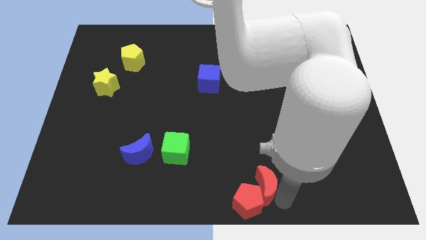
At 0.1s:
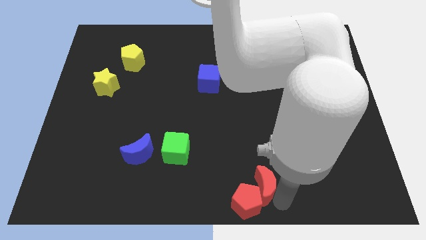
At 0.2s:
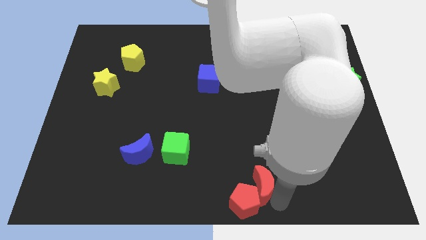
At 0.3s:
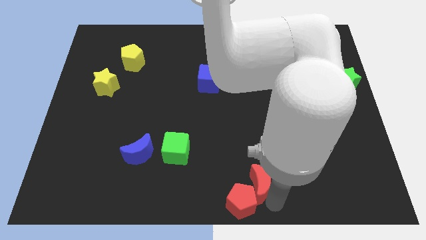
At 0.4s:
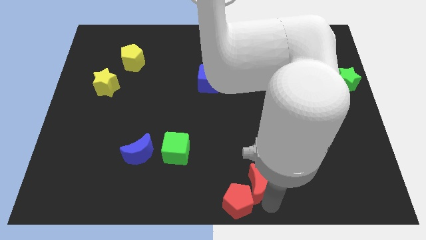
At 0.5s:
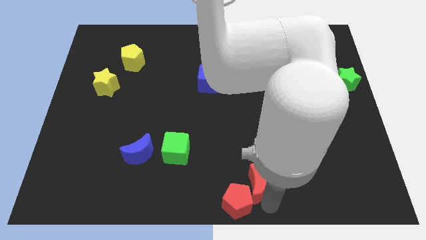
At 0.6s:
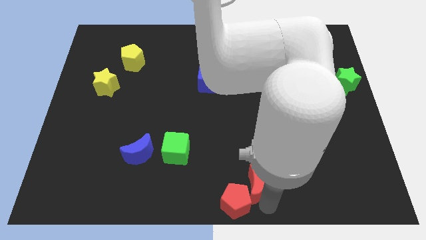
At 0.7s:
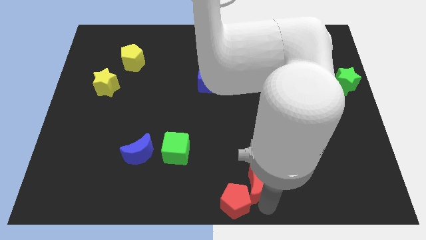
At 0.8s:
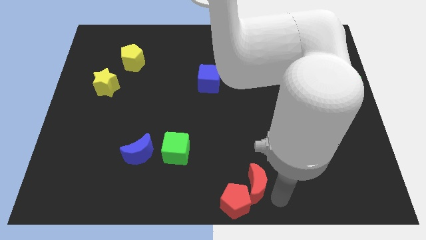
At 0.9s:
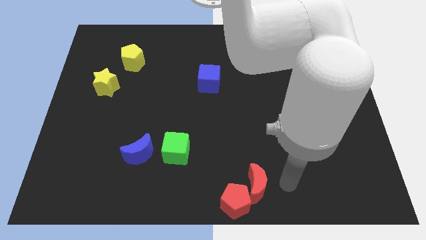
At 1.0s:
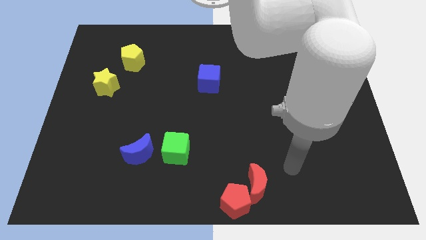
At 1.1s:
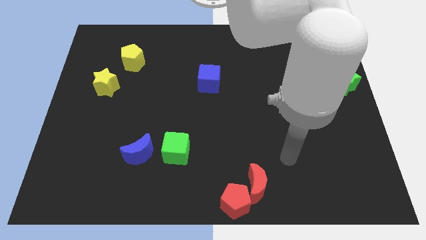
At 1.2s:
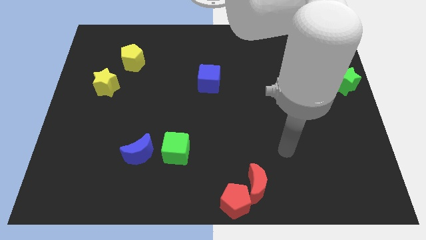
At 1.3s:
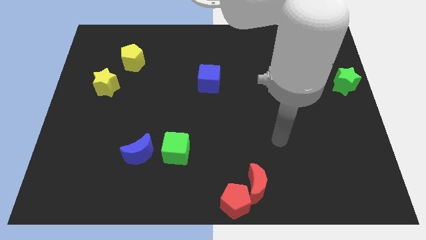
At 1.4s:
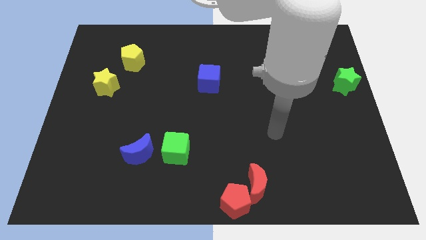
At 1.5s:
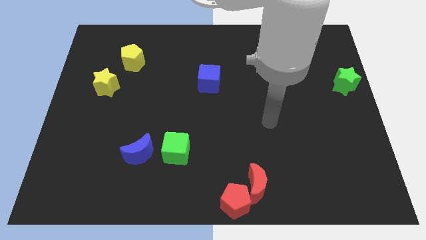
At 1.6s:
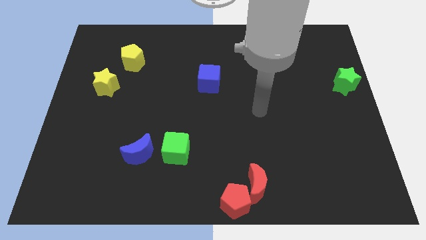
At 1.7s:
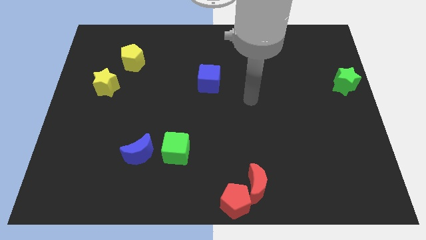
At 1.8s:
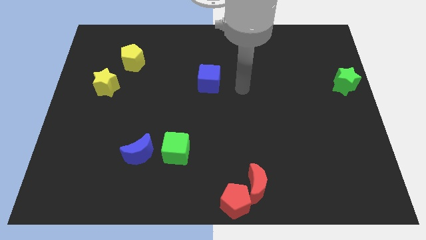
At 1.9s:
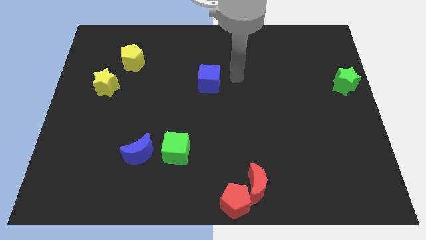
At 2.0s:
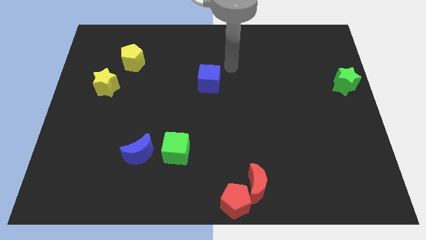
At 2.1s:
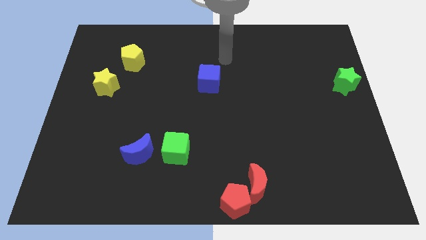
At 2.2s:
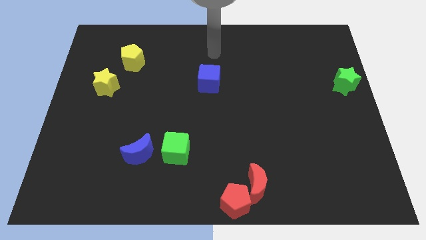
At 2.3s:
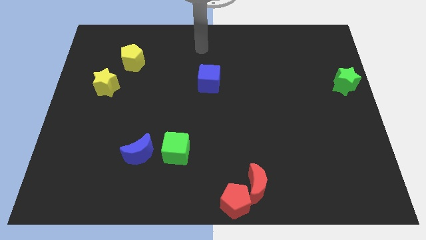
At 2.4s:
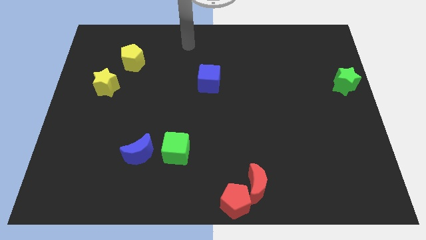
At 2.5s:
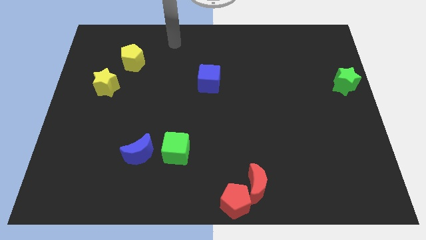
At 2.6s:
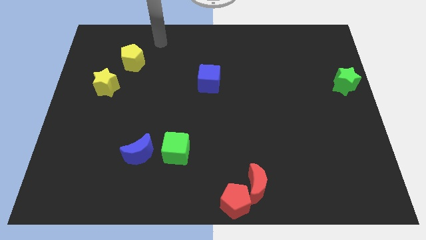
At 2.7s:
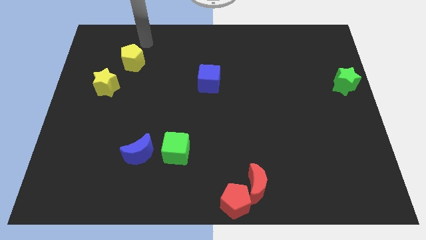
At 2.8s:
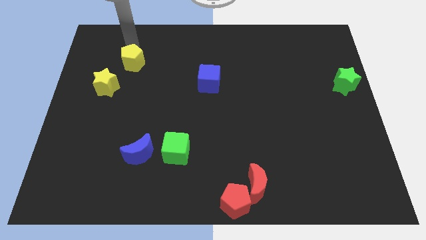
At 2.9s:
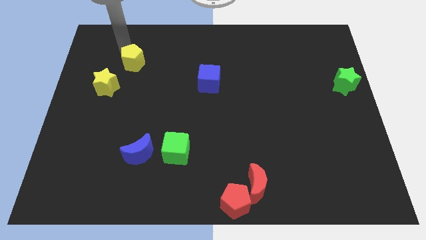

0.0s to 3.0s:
place the arm above the yellow pentagon

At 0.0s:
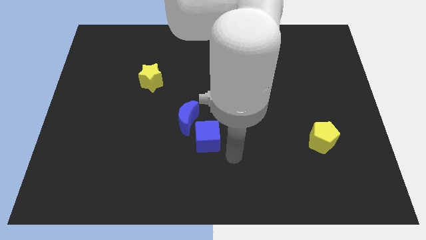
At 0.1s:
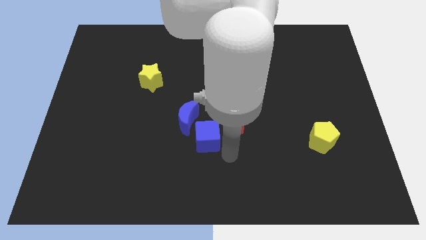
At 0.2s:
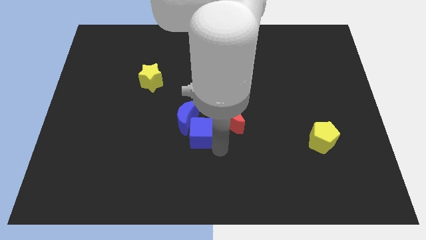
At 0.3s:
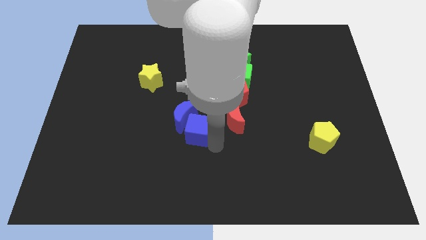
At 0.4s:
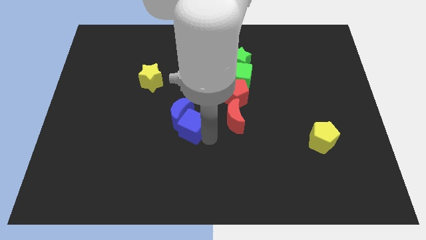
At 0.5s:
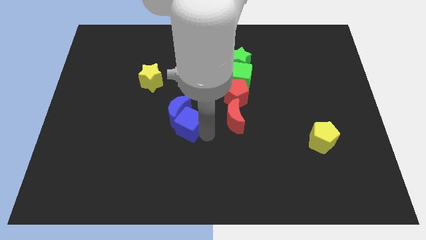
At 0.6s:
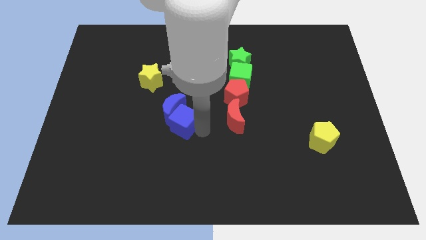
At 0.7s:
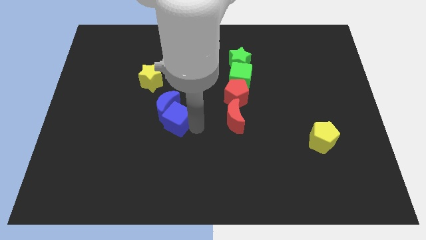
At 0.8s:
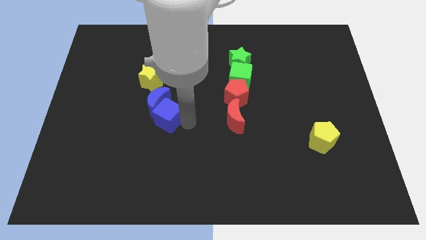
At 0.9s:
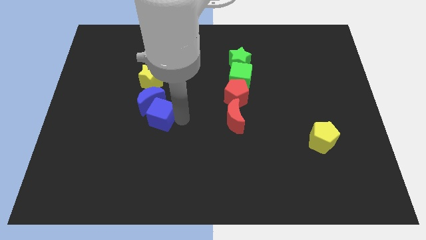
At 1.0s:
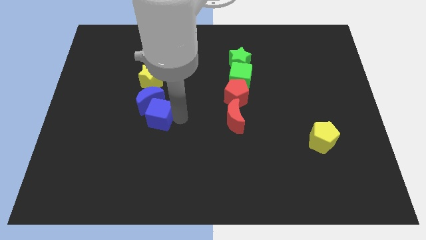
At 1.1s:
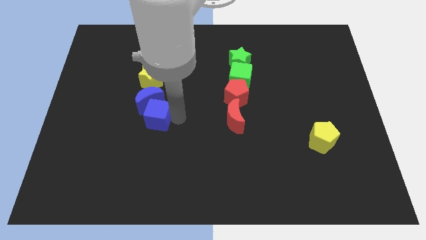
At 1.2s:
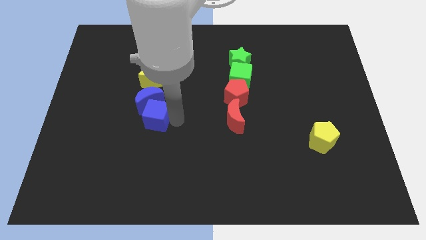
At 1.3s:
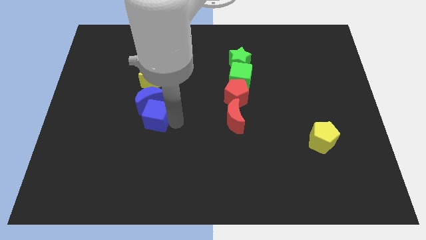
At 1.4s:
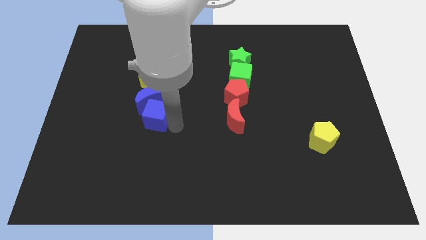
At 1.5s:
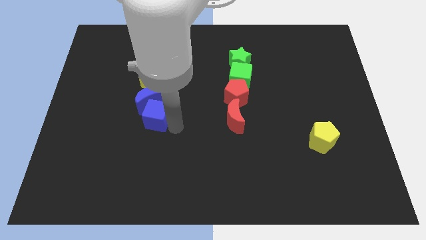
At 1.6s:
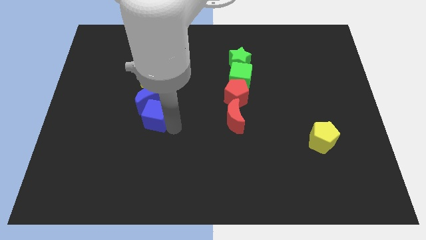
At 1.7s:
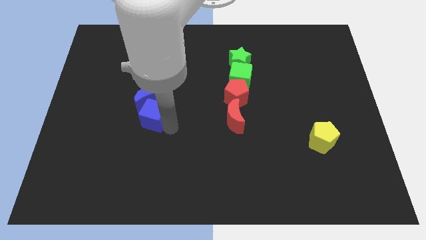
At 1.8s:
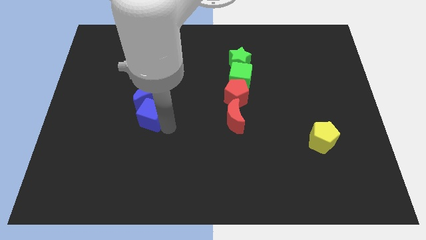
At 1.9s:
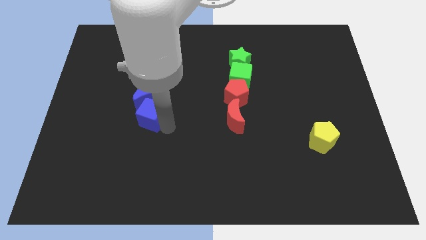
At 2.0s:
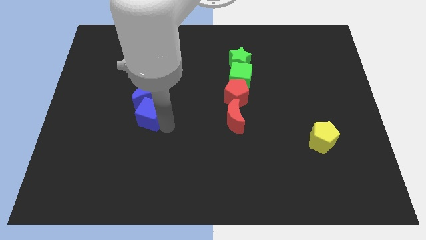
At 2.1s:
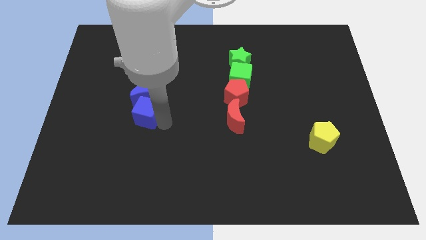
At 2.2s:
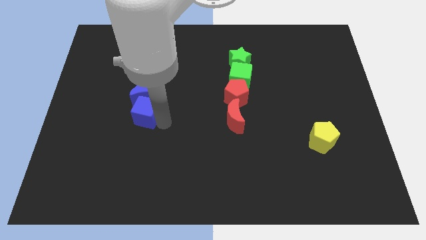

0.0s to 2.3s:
push the blue blocks towards bottom of yellow star

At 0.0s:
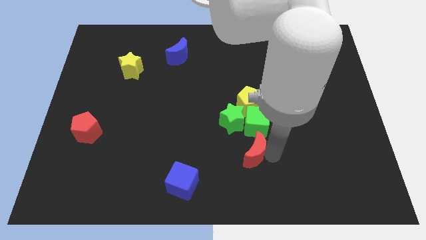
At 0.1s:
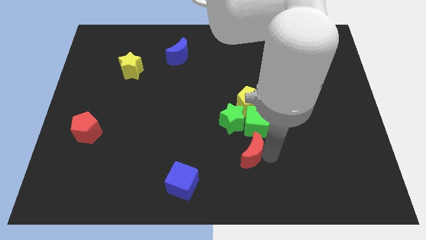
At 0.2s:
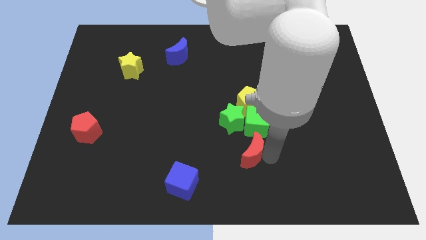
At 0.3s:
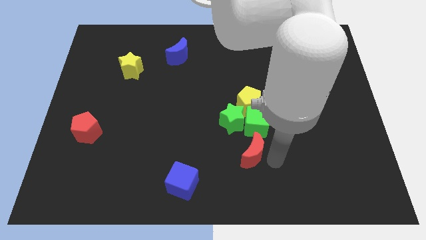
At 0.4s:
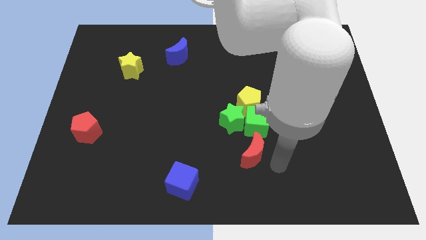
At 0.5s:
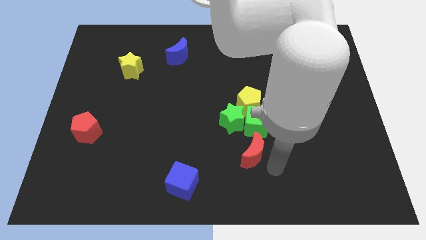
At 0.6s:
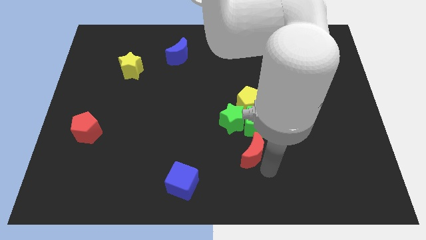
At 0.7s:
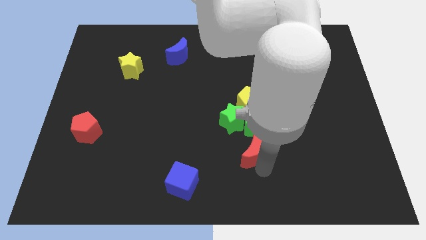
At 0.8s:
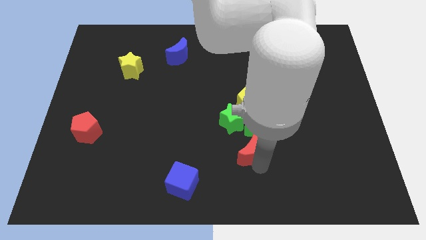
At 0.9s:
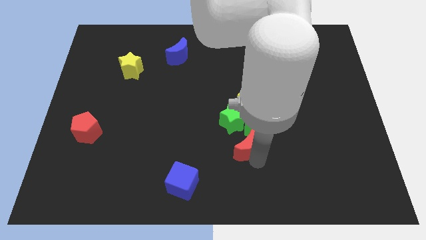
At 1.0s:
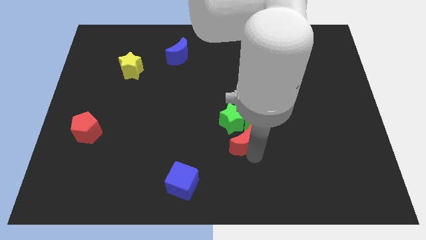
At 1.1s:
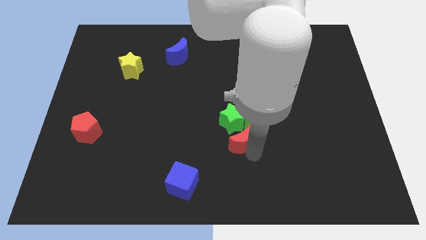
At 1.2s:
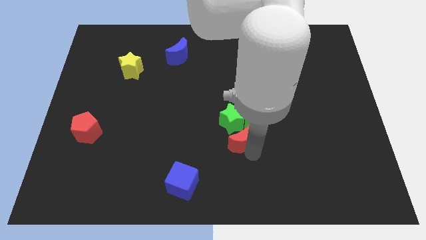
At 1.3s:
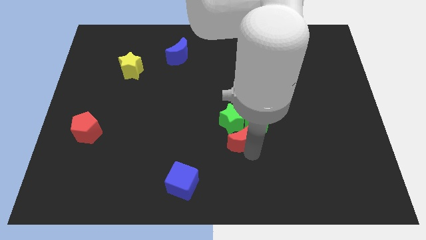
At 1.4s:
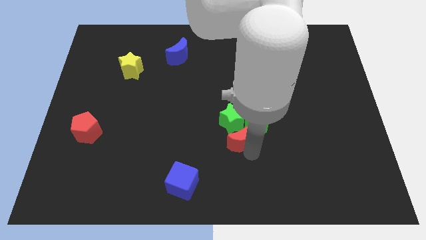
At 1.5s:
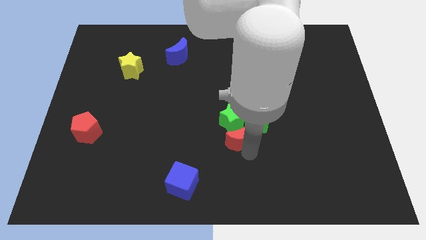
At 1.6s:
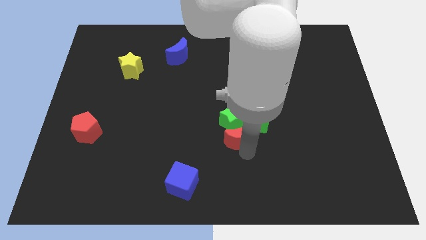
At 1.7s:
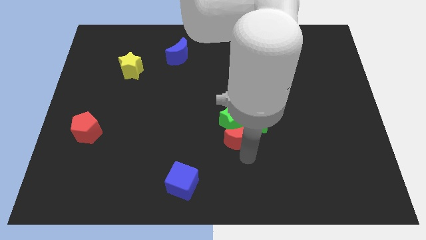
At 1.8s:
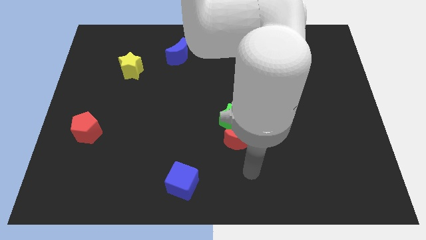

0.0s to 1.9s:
push the red moon towards the bottom of the green star

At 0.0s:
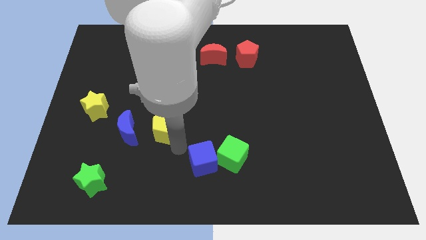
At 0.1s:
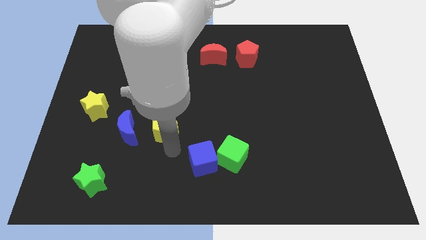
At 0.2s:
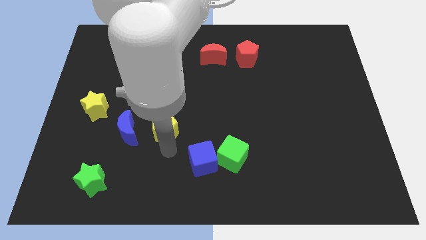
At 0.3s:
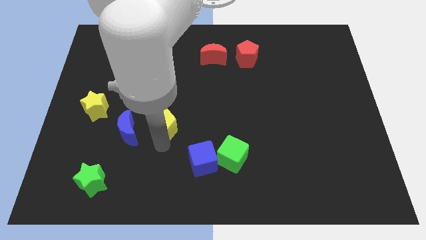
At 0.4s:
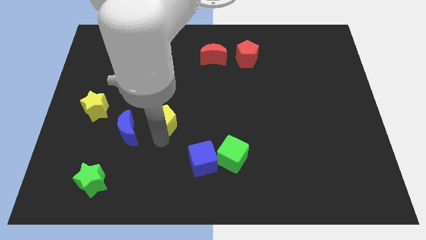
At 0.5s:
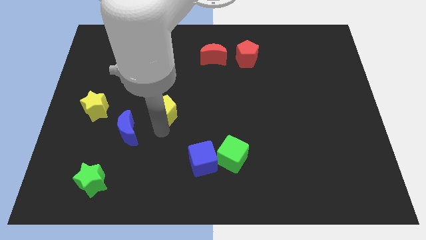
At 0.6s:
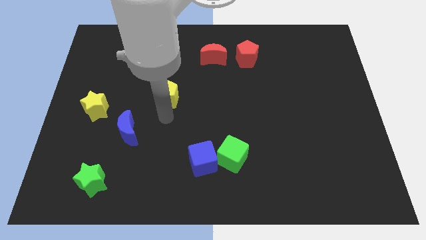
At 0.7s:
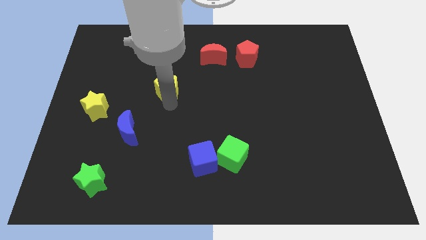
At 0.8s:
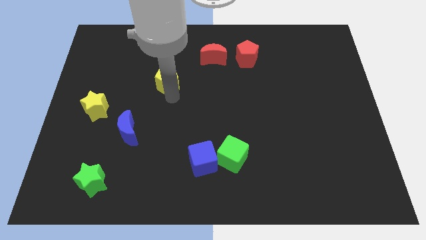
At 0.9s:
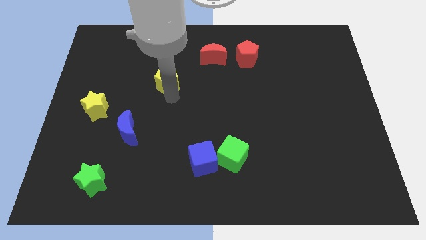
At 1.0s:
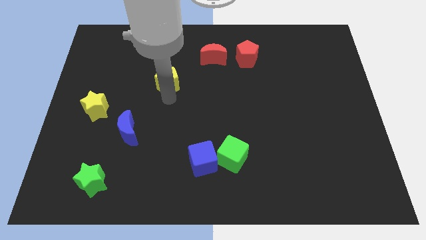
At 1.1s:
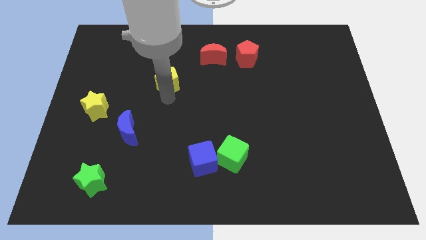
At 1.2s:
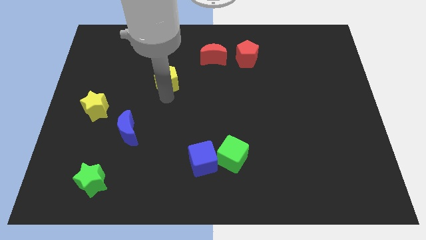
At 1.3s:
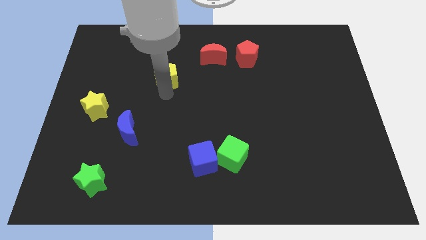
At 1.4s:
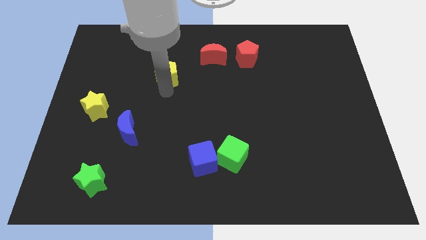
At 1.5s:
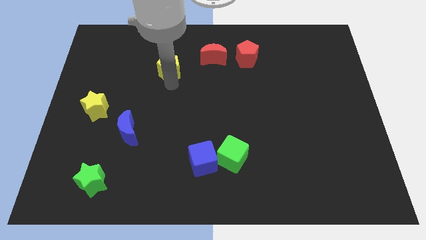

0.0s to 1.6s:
push the yellow pentagon towards the top side of the board

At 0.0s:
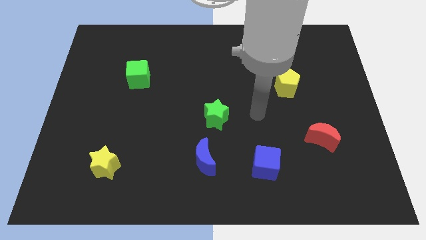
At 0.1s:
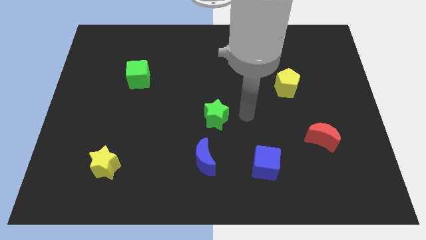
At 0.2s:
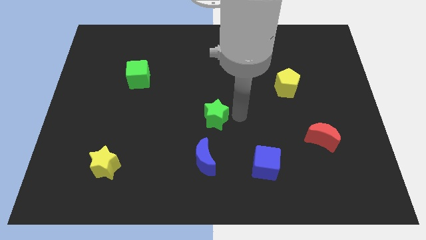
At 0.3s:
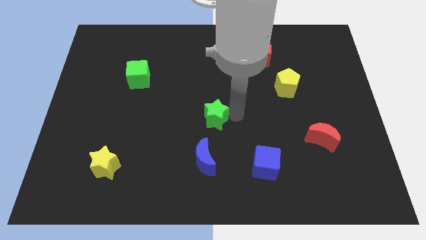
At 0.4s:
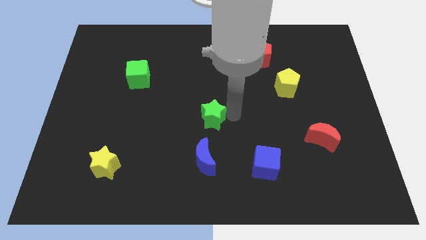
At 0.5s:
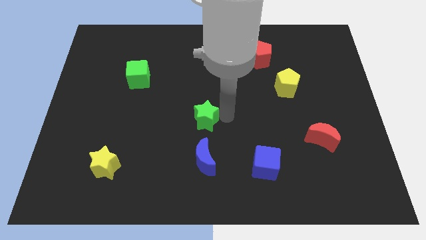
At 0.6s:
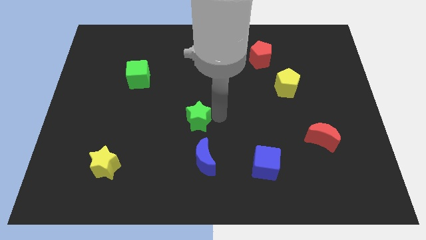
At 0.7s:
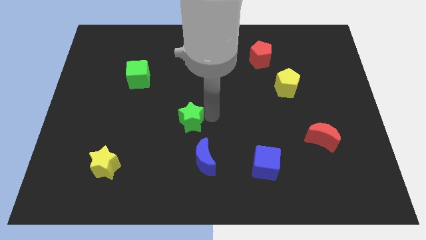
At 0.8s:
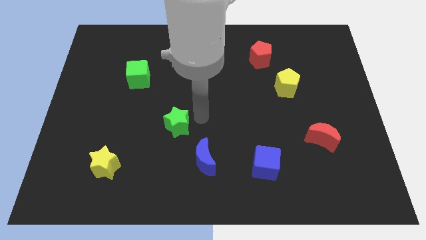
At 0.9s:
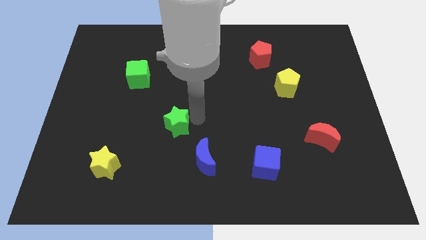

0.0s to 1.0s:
put green star diagonally top left to blue crescent
